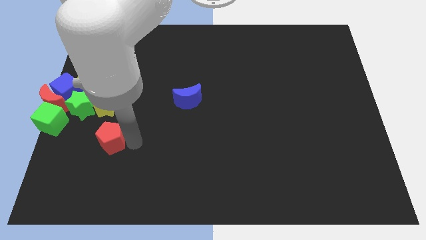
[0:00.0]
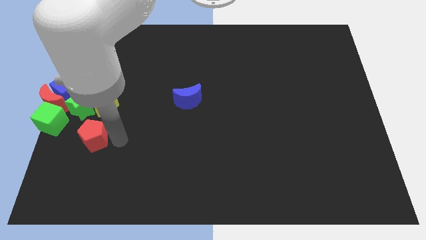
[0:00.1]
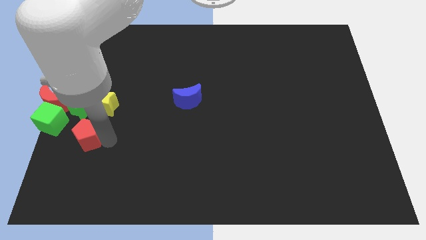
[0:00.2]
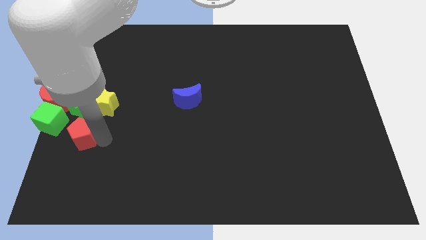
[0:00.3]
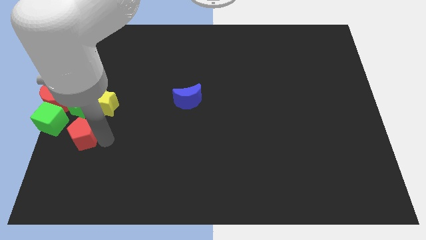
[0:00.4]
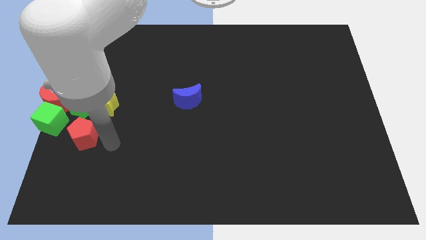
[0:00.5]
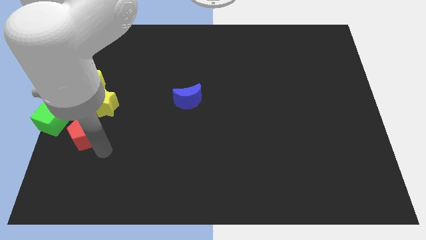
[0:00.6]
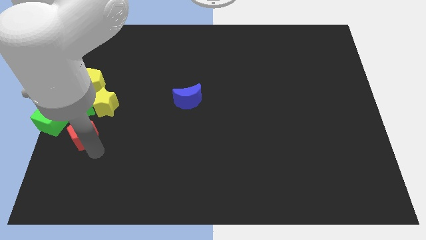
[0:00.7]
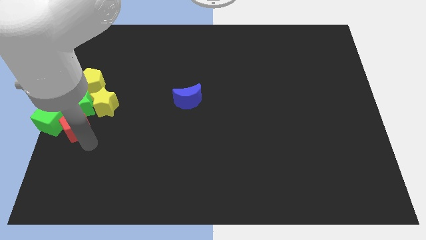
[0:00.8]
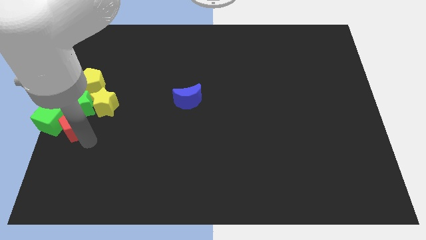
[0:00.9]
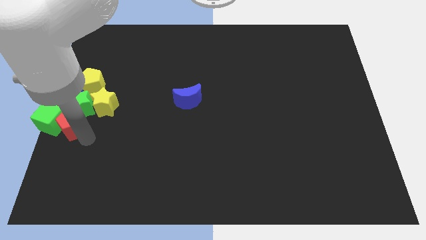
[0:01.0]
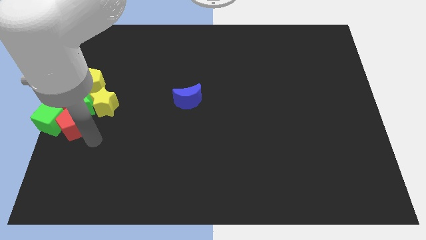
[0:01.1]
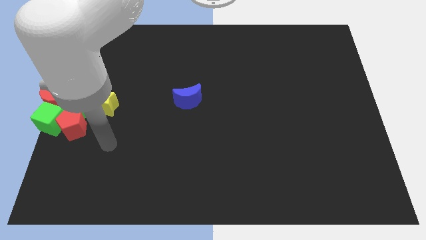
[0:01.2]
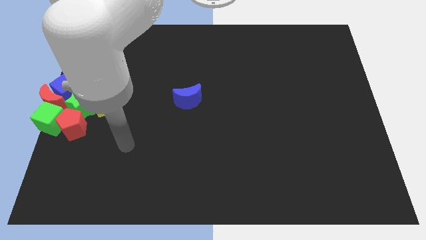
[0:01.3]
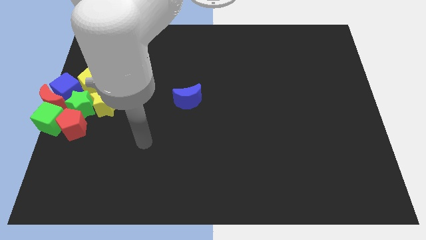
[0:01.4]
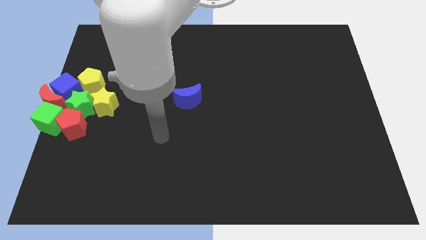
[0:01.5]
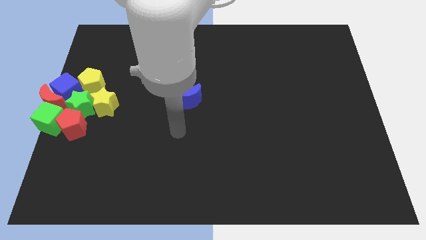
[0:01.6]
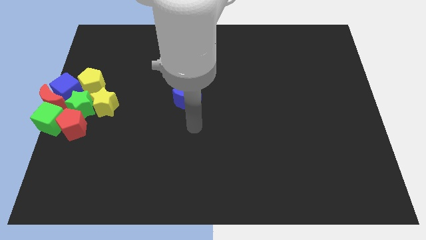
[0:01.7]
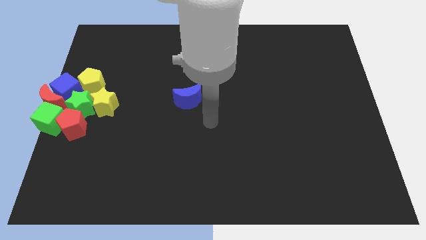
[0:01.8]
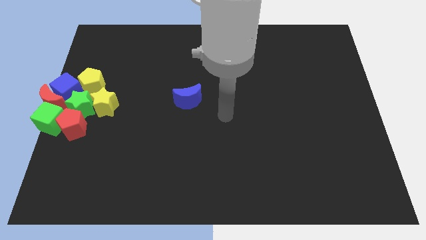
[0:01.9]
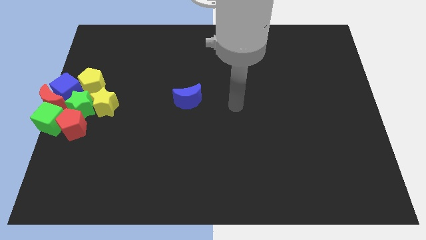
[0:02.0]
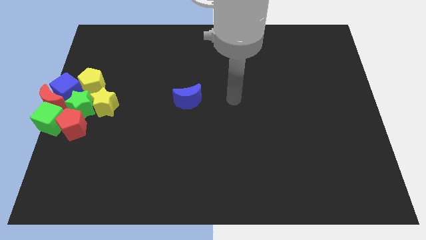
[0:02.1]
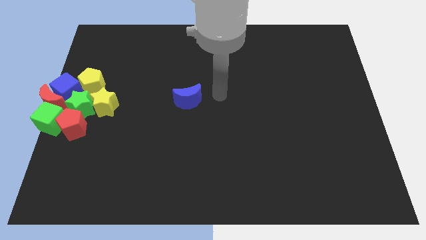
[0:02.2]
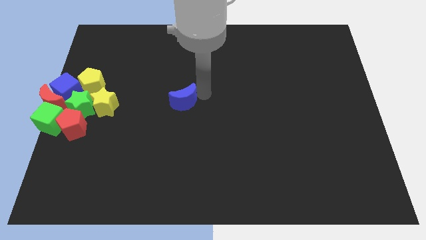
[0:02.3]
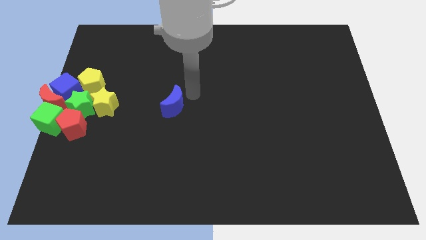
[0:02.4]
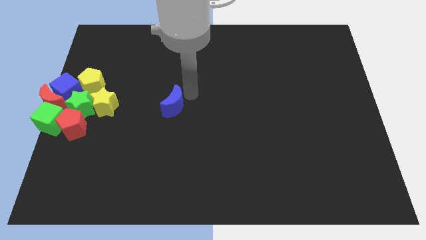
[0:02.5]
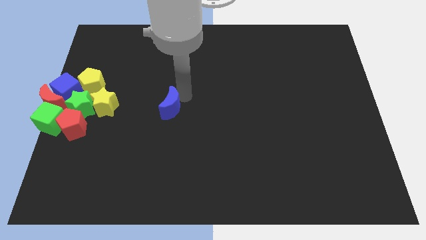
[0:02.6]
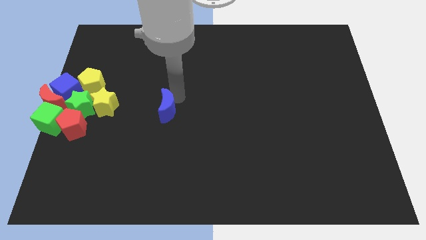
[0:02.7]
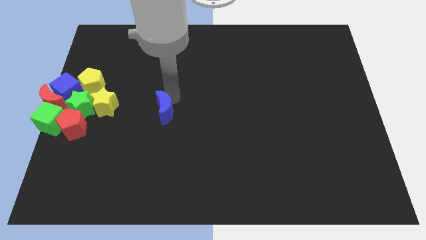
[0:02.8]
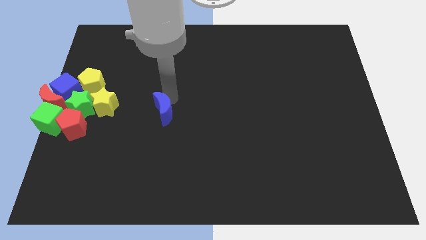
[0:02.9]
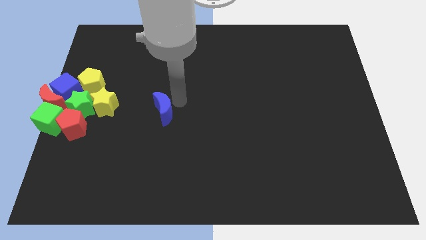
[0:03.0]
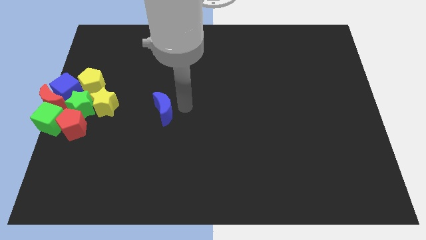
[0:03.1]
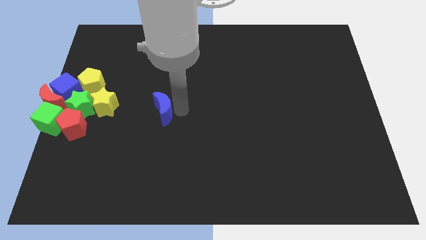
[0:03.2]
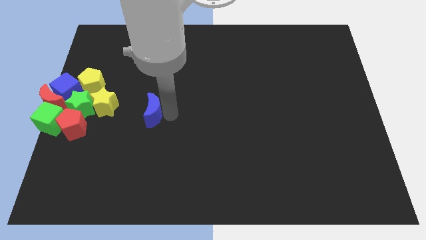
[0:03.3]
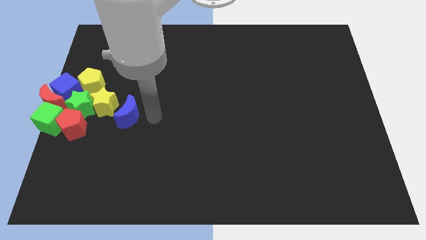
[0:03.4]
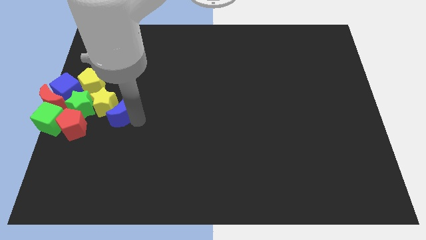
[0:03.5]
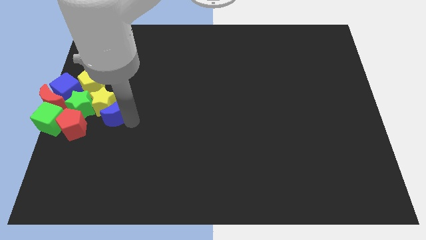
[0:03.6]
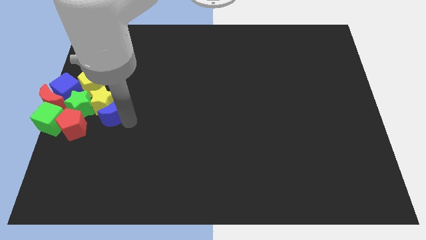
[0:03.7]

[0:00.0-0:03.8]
place the red pentagon and blue cube to bottom of group of blocks

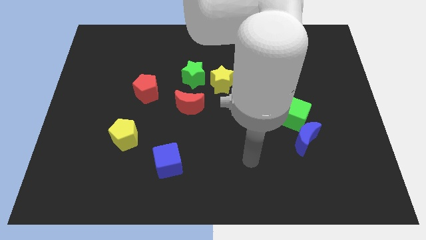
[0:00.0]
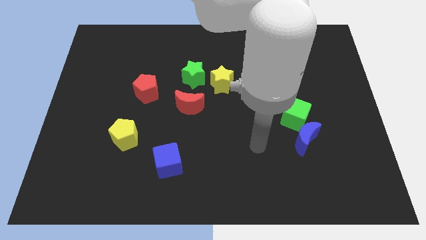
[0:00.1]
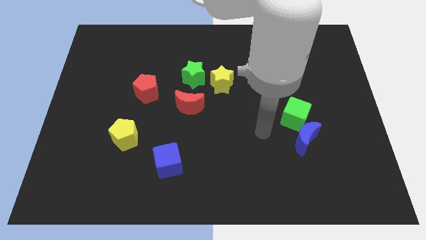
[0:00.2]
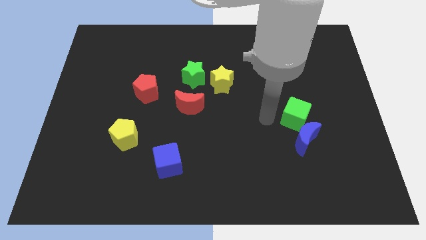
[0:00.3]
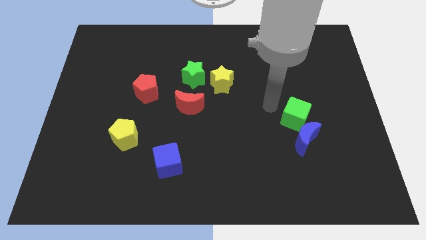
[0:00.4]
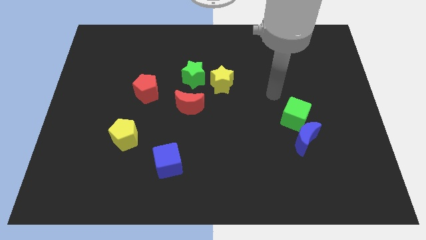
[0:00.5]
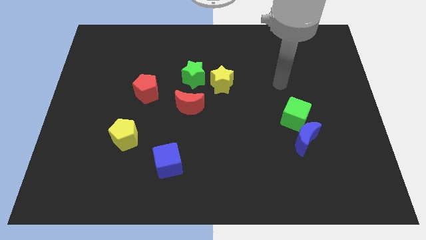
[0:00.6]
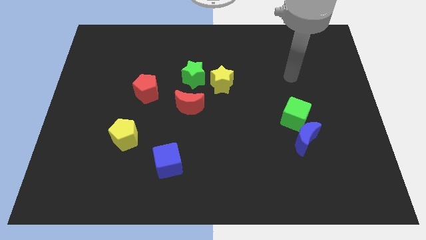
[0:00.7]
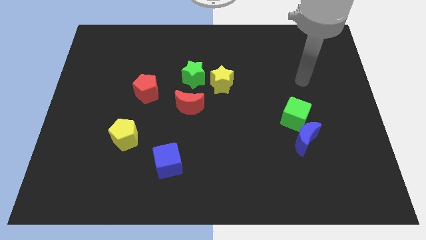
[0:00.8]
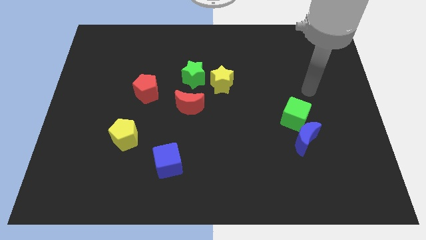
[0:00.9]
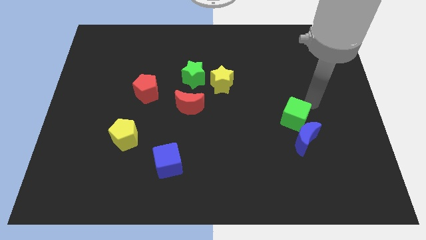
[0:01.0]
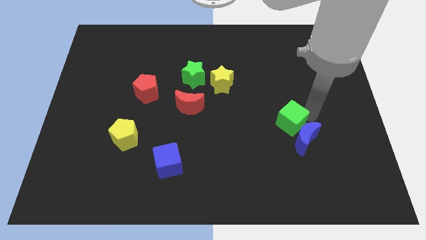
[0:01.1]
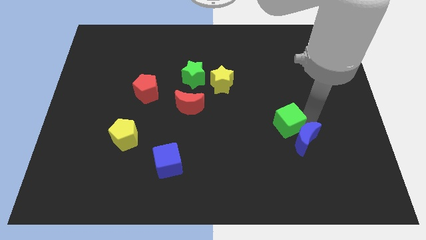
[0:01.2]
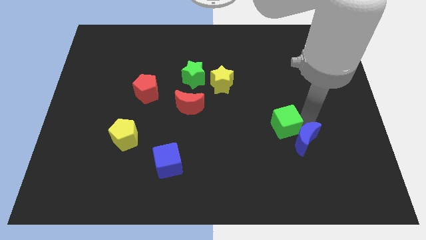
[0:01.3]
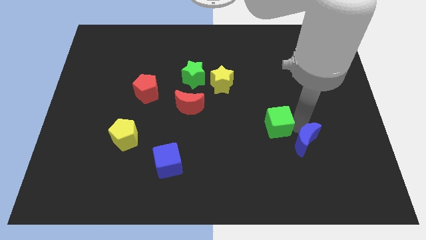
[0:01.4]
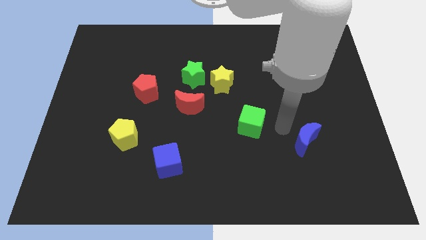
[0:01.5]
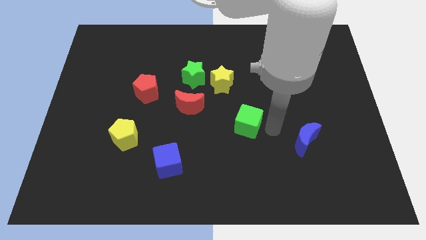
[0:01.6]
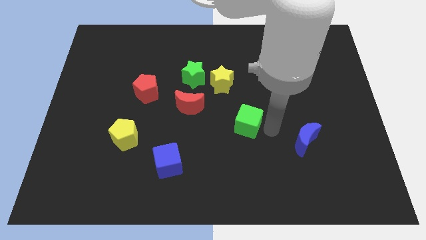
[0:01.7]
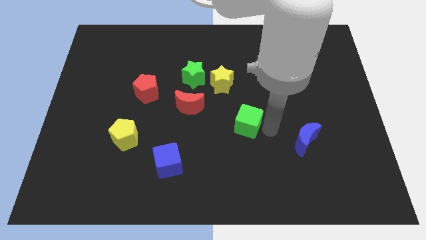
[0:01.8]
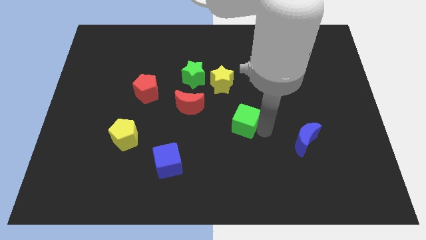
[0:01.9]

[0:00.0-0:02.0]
move the green cube slightly to the left

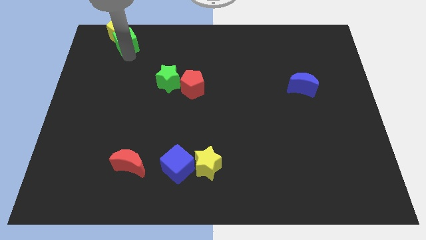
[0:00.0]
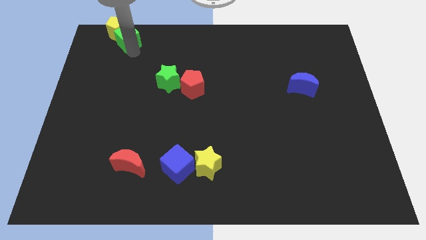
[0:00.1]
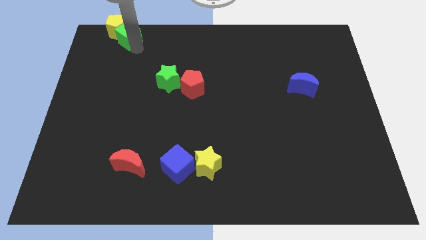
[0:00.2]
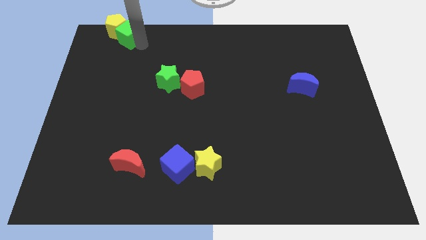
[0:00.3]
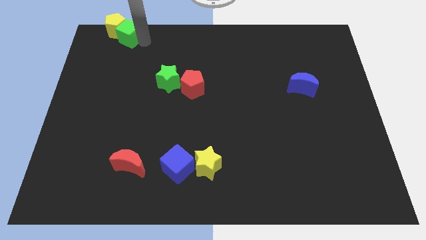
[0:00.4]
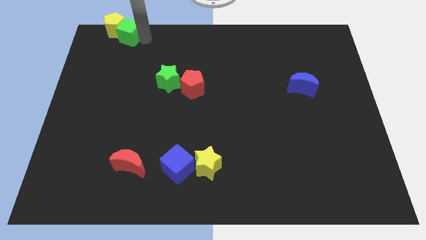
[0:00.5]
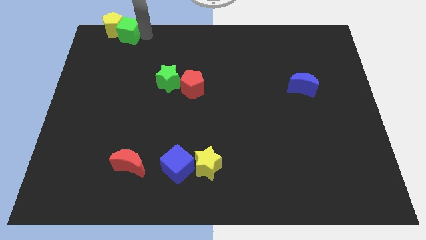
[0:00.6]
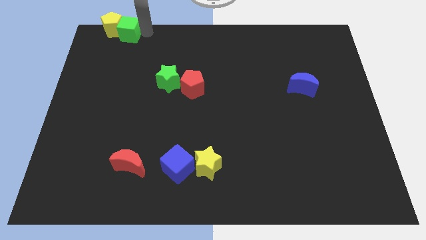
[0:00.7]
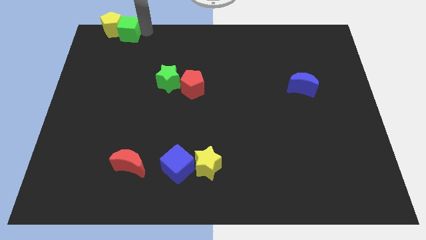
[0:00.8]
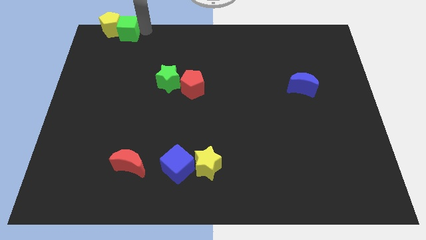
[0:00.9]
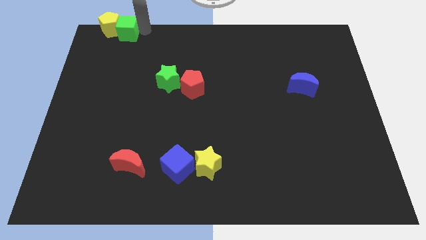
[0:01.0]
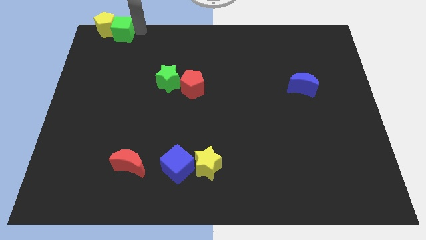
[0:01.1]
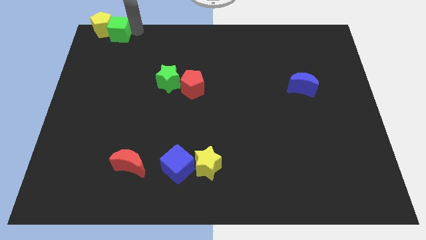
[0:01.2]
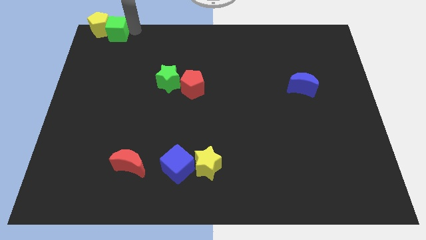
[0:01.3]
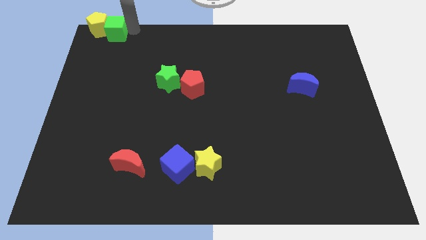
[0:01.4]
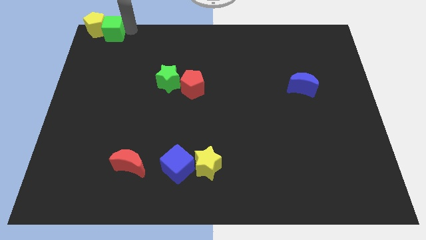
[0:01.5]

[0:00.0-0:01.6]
place the green cube and yellow pentagon to the top elft corner

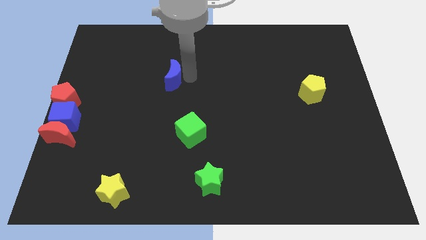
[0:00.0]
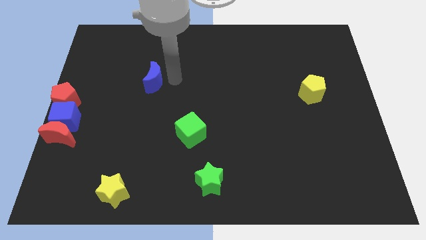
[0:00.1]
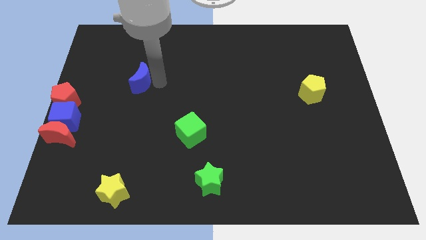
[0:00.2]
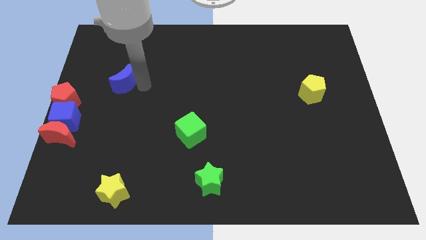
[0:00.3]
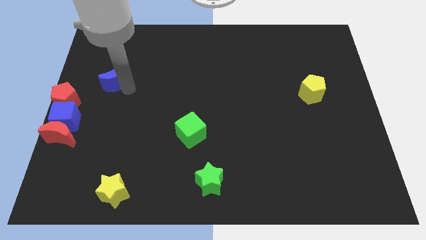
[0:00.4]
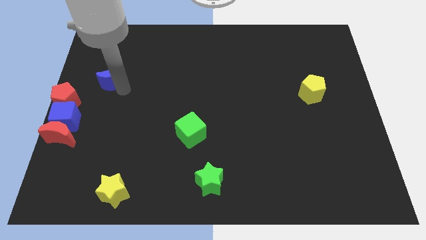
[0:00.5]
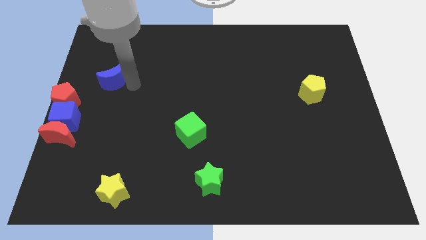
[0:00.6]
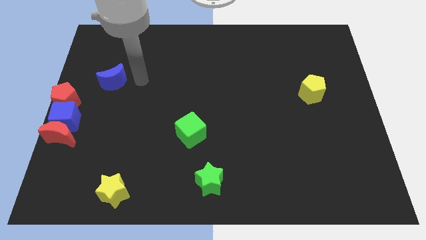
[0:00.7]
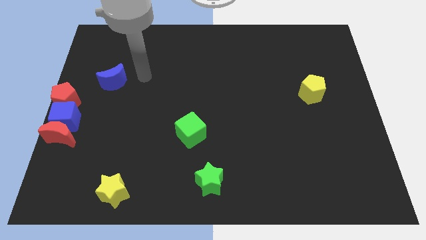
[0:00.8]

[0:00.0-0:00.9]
move blue moon diagonally above the red moon

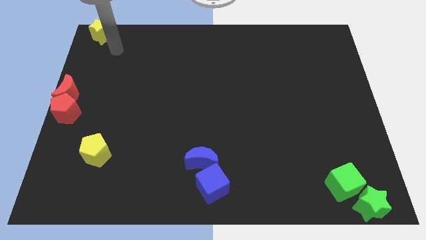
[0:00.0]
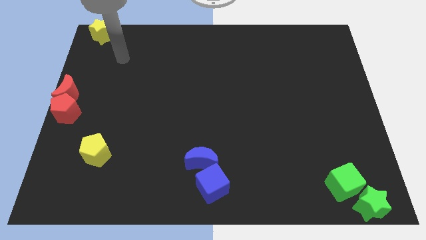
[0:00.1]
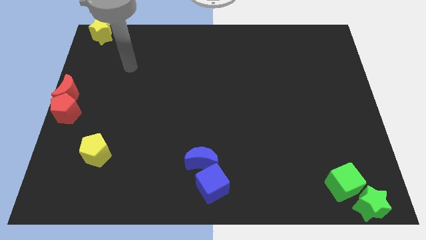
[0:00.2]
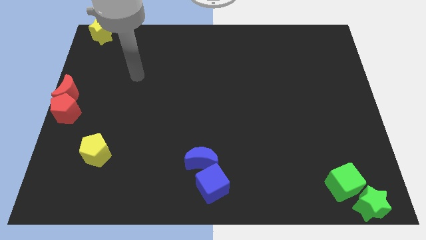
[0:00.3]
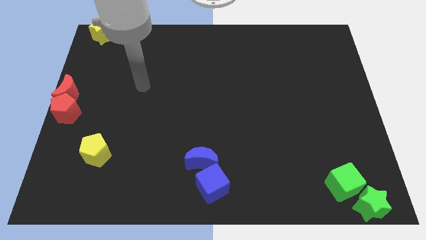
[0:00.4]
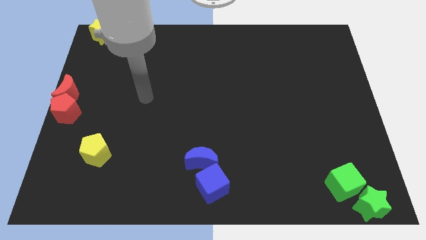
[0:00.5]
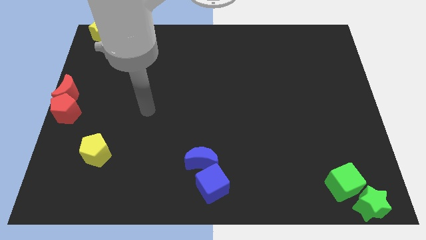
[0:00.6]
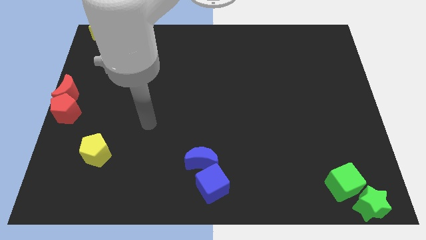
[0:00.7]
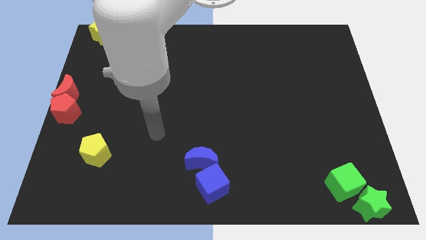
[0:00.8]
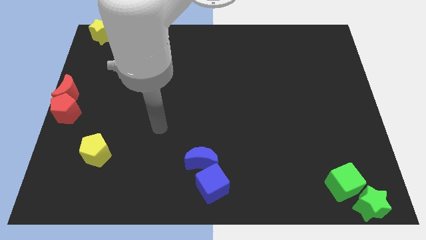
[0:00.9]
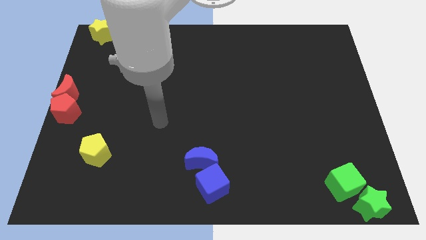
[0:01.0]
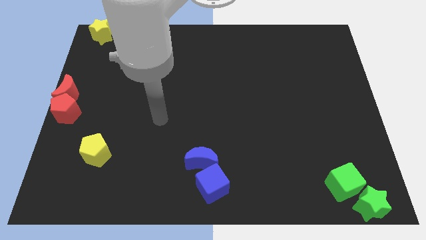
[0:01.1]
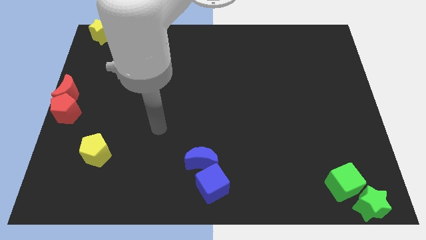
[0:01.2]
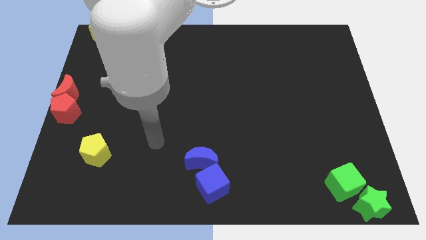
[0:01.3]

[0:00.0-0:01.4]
move the arm diagonally down
